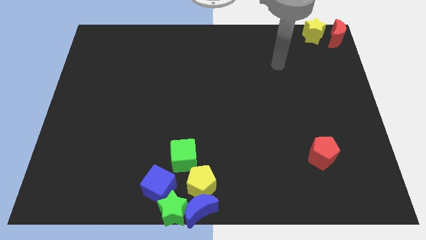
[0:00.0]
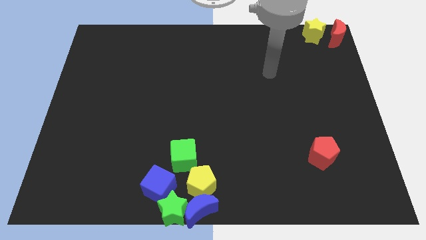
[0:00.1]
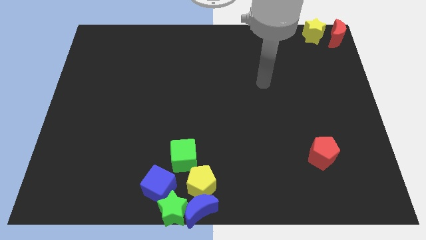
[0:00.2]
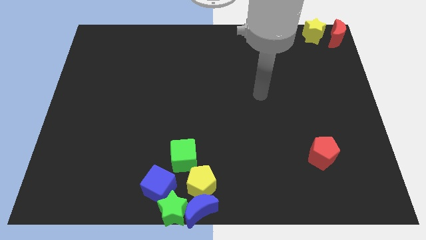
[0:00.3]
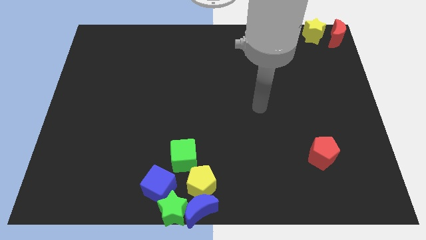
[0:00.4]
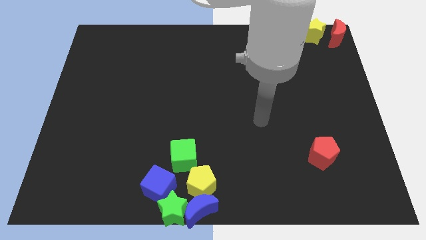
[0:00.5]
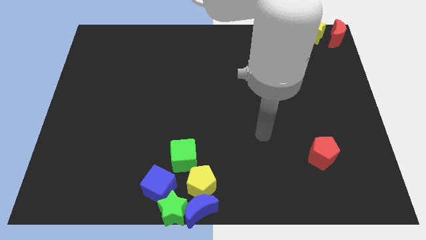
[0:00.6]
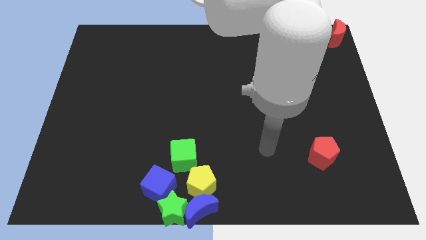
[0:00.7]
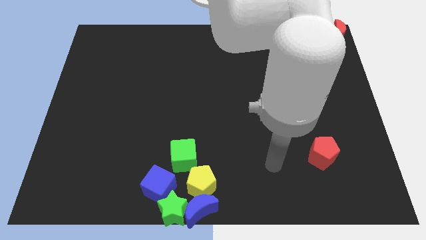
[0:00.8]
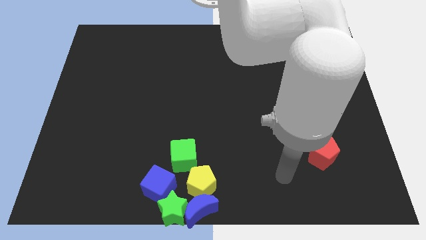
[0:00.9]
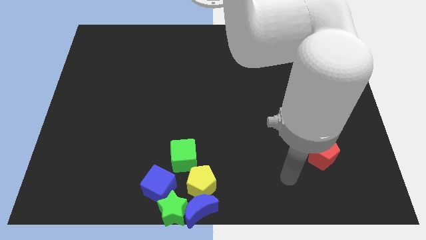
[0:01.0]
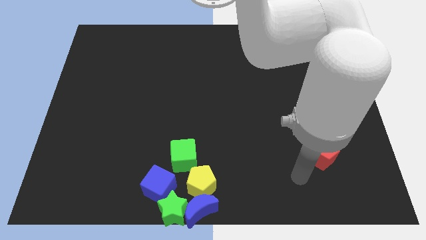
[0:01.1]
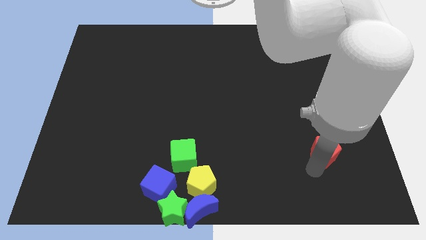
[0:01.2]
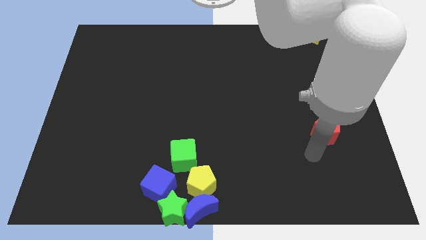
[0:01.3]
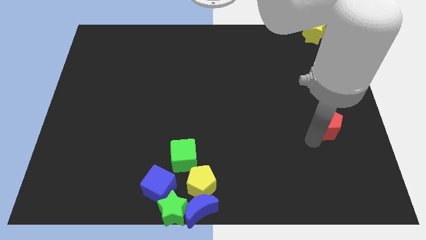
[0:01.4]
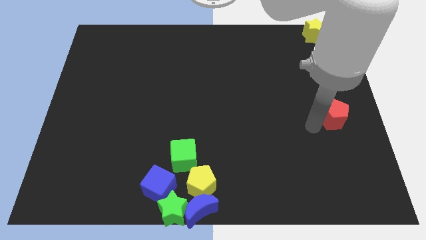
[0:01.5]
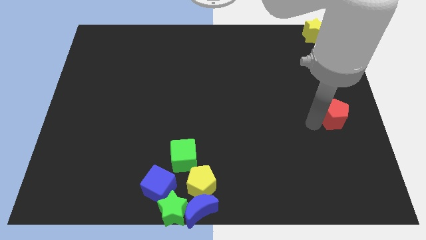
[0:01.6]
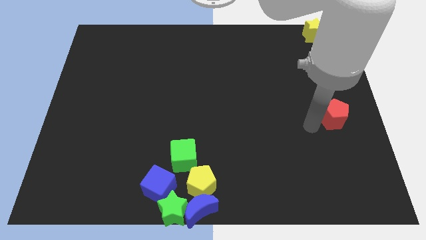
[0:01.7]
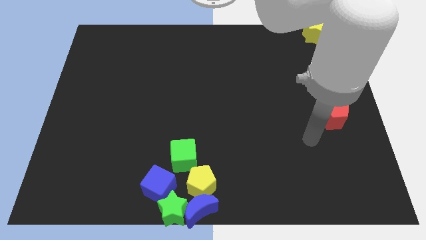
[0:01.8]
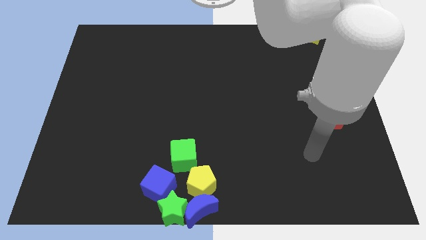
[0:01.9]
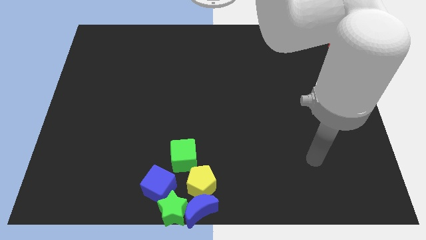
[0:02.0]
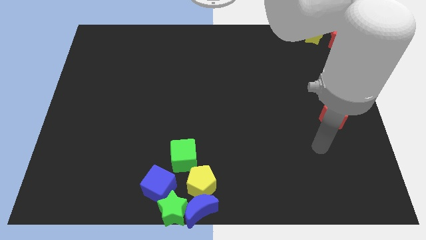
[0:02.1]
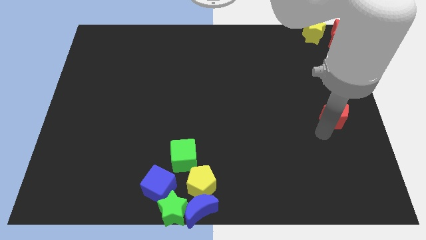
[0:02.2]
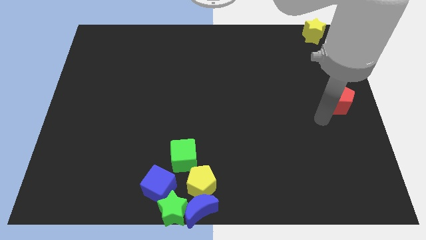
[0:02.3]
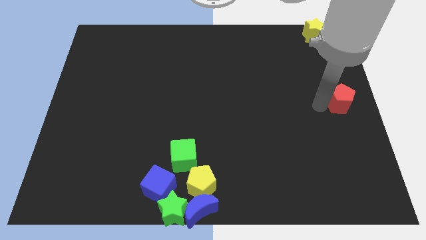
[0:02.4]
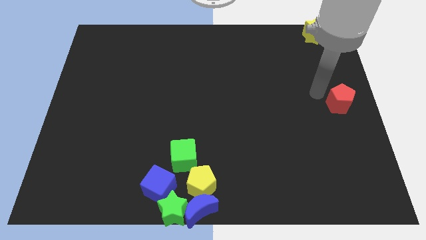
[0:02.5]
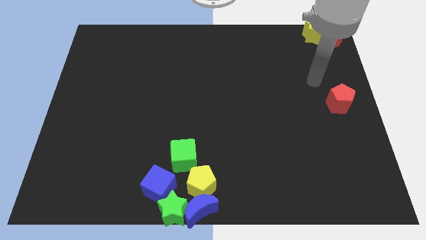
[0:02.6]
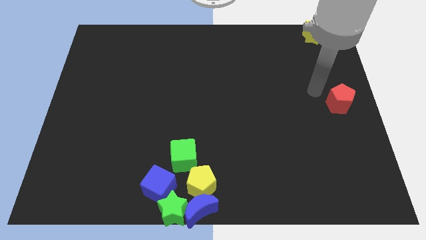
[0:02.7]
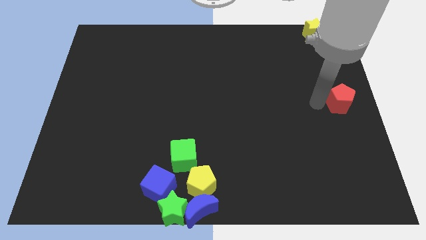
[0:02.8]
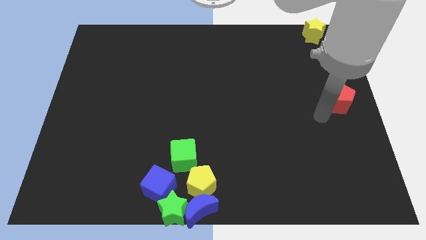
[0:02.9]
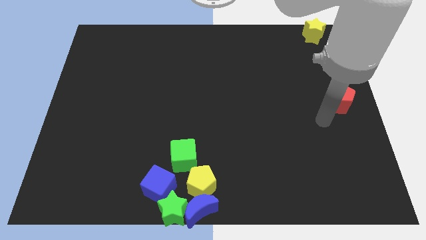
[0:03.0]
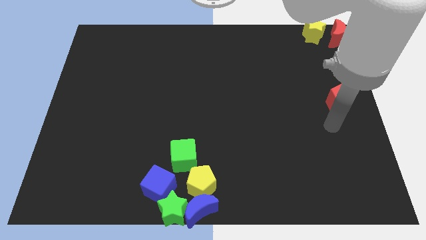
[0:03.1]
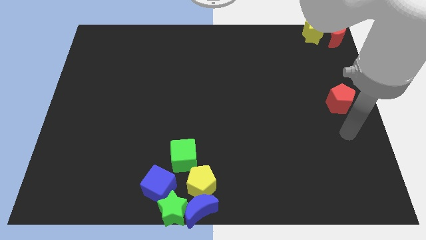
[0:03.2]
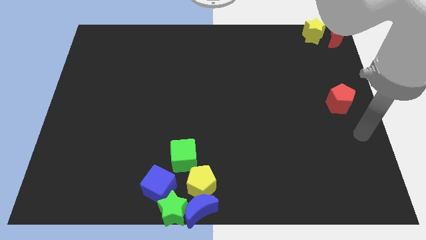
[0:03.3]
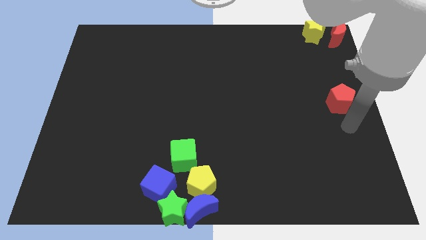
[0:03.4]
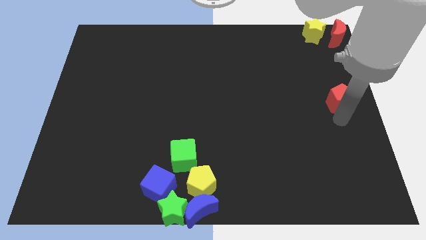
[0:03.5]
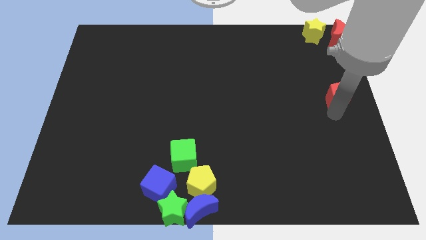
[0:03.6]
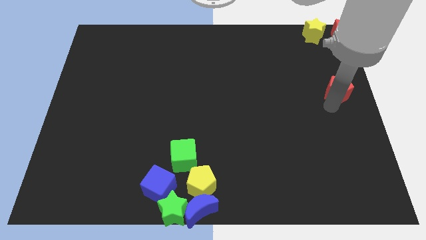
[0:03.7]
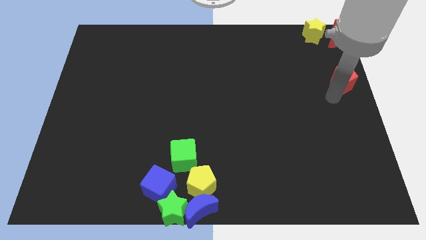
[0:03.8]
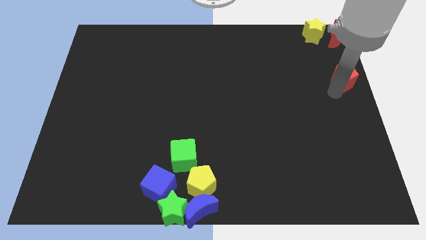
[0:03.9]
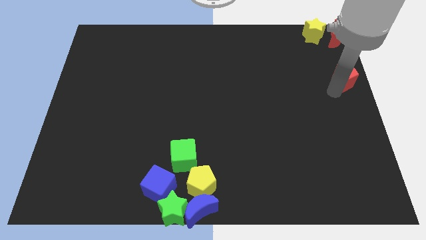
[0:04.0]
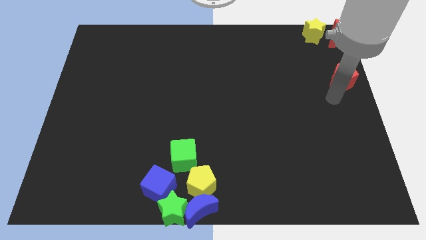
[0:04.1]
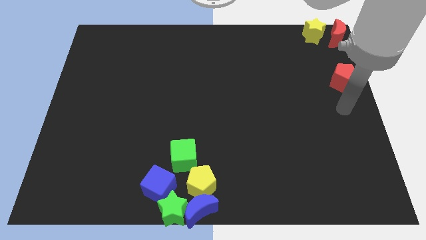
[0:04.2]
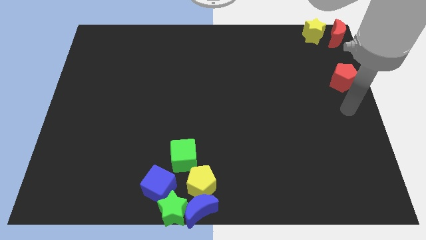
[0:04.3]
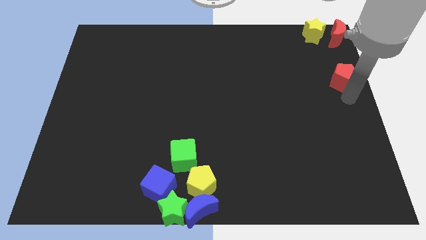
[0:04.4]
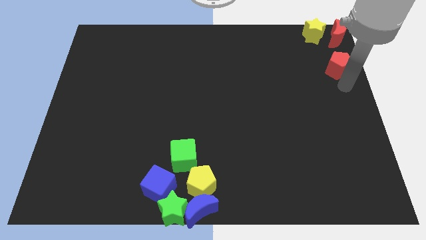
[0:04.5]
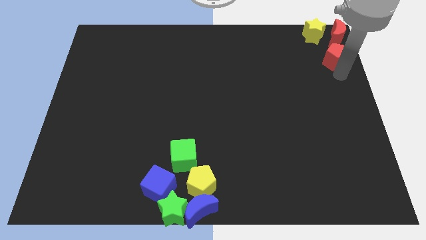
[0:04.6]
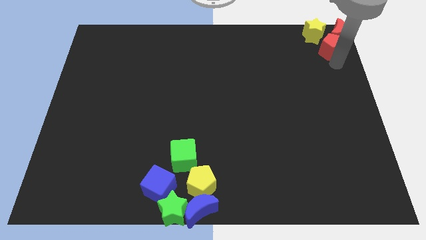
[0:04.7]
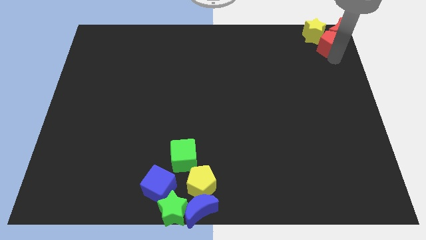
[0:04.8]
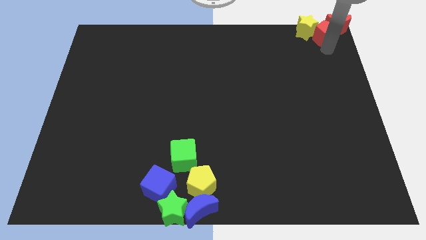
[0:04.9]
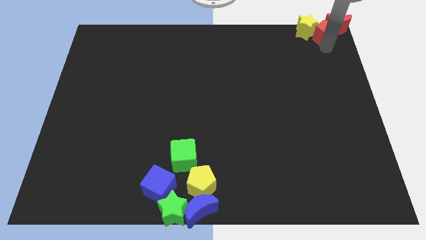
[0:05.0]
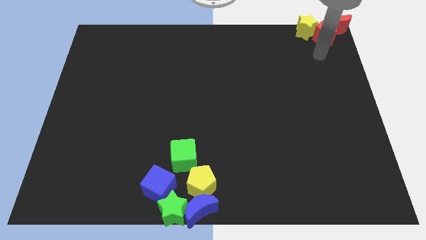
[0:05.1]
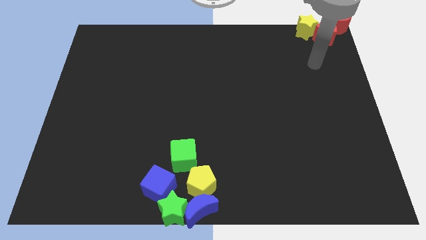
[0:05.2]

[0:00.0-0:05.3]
move red pentagon between the yellow star and red moon

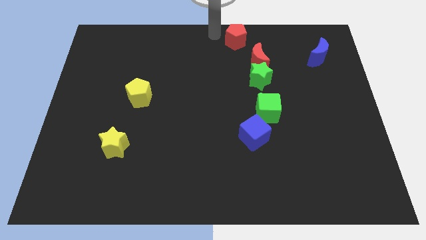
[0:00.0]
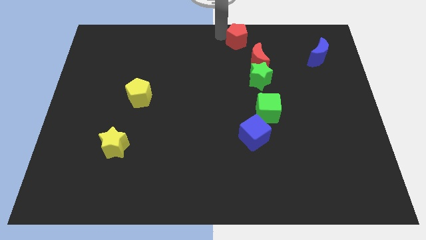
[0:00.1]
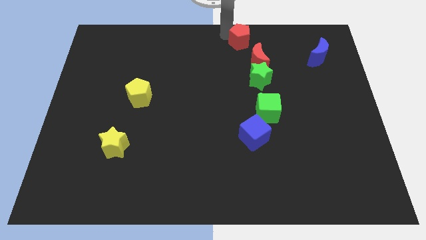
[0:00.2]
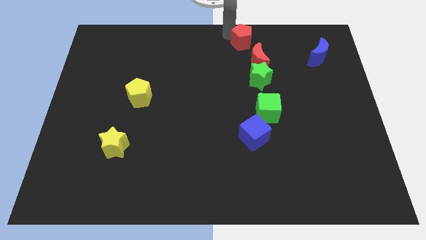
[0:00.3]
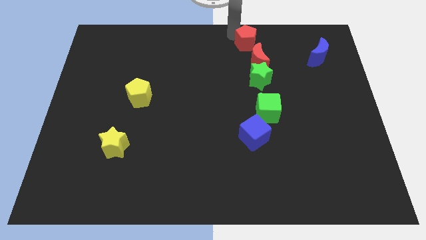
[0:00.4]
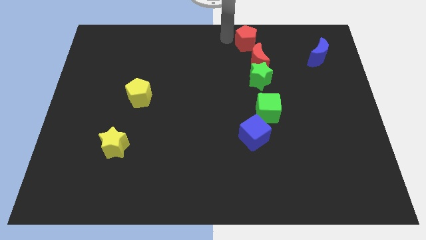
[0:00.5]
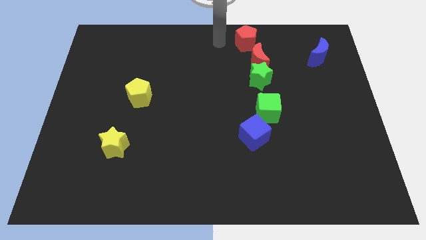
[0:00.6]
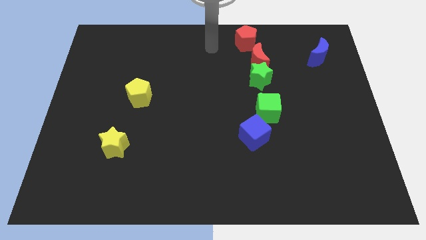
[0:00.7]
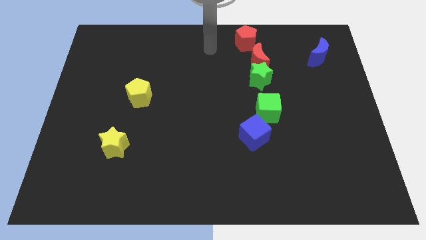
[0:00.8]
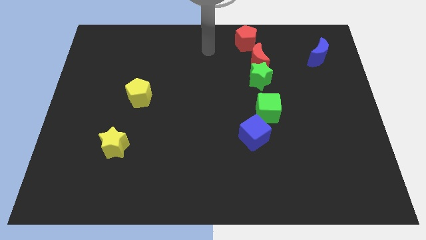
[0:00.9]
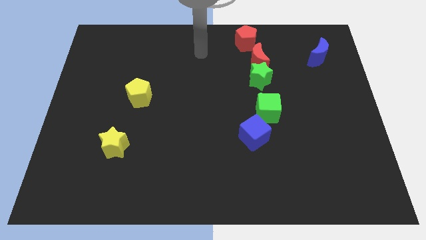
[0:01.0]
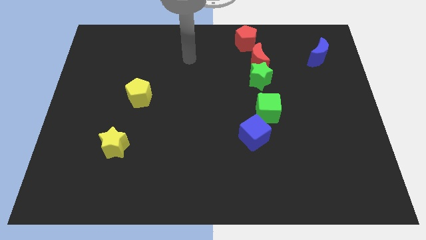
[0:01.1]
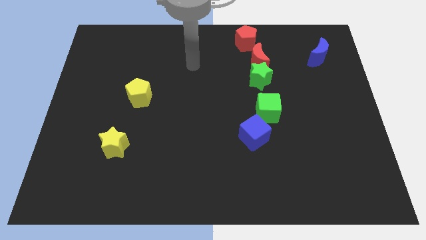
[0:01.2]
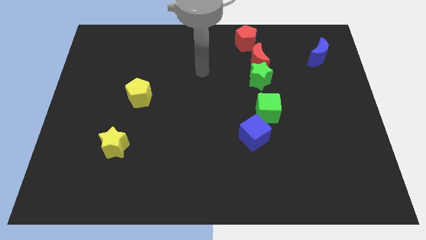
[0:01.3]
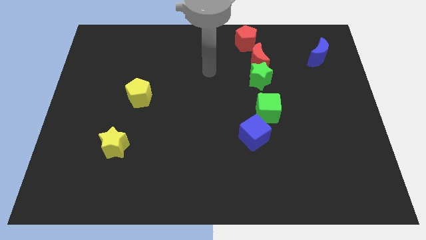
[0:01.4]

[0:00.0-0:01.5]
drag the red pentagon diagonally top left to the red moon

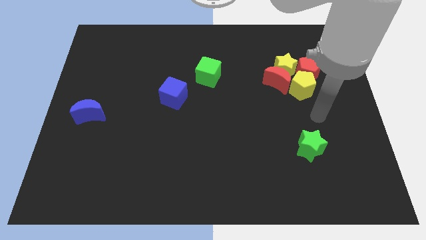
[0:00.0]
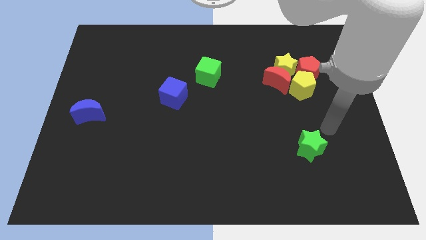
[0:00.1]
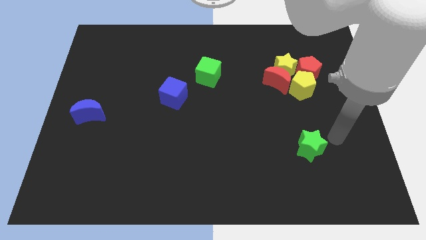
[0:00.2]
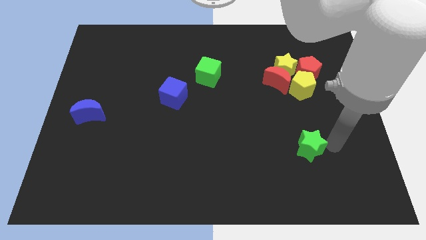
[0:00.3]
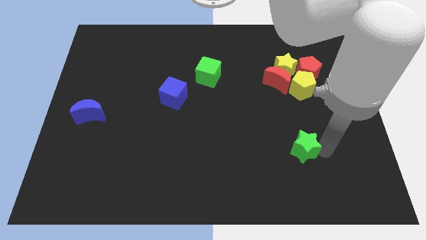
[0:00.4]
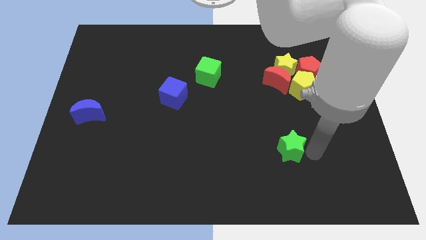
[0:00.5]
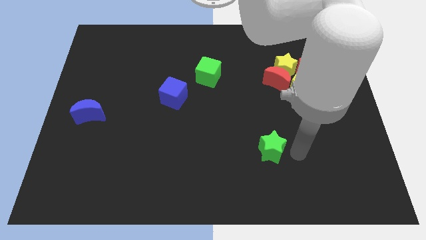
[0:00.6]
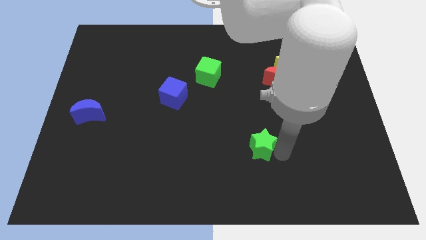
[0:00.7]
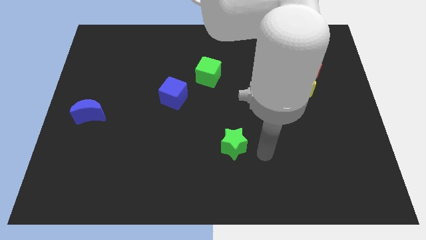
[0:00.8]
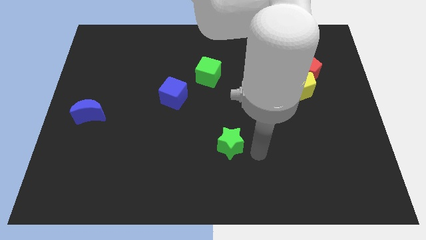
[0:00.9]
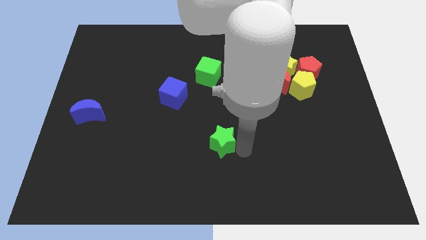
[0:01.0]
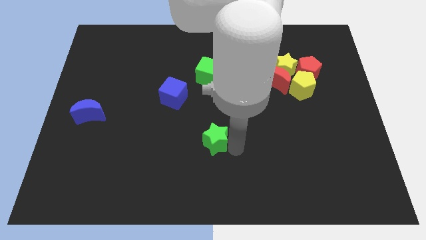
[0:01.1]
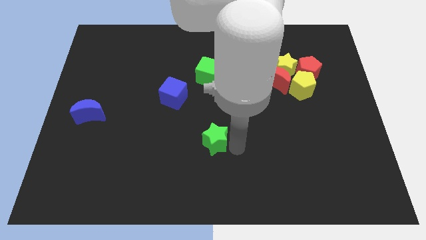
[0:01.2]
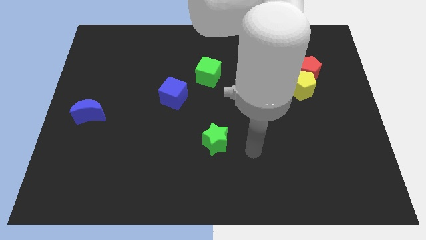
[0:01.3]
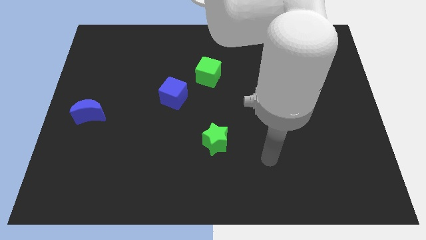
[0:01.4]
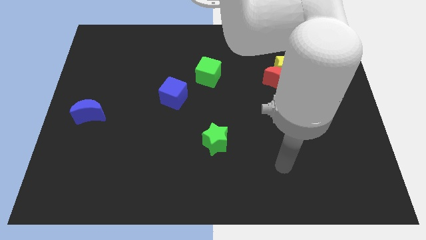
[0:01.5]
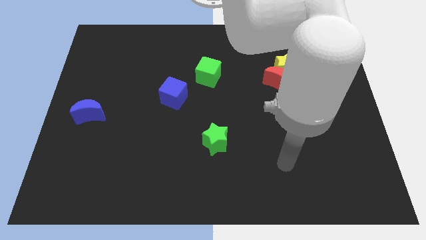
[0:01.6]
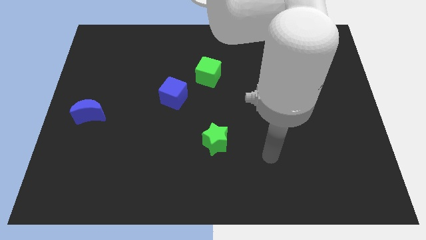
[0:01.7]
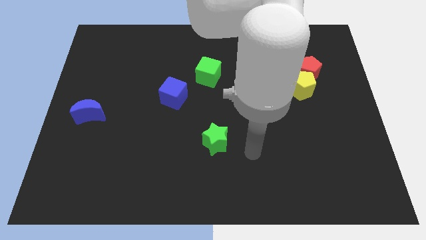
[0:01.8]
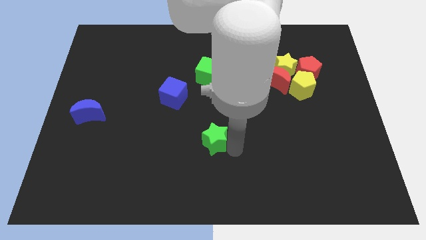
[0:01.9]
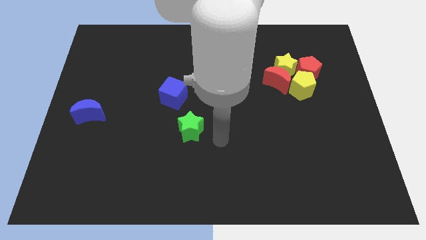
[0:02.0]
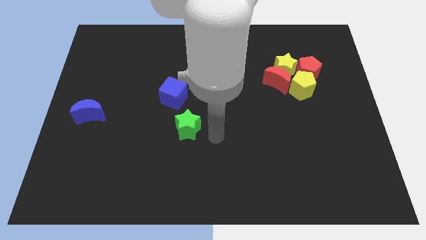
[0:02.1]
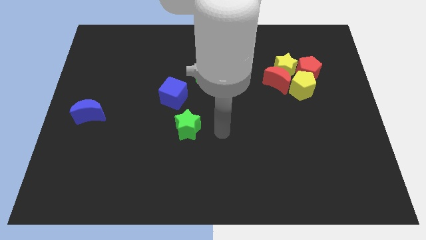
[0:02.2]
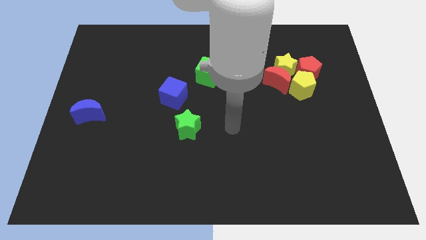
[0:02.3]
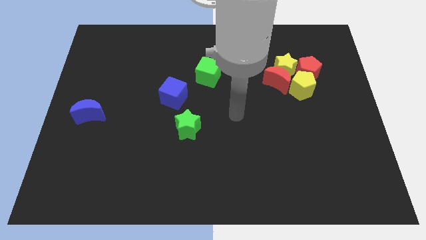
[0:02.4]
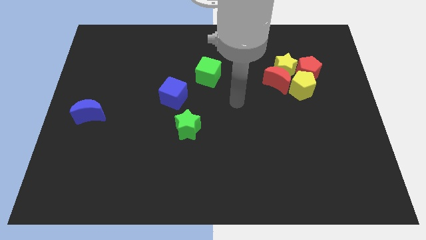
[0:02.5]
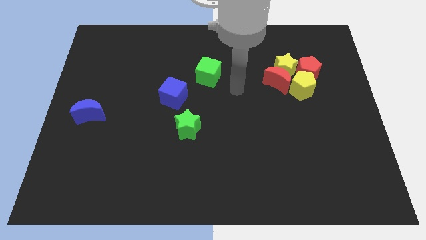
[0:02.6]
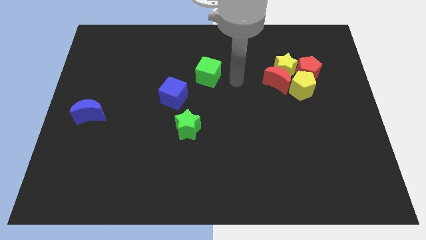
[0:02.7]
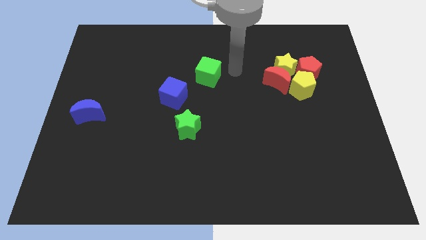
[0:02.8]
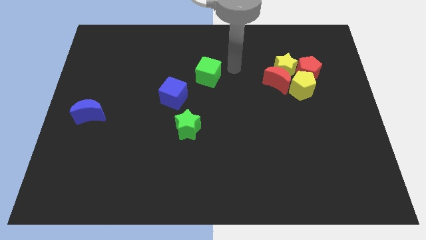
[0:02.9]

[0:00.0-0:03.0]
slide the green star to the right bottom of the green star
